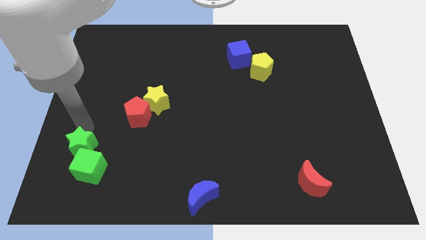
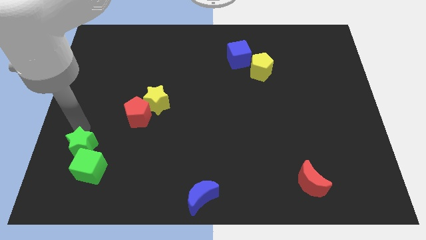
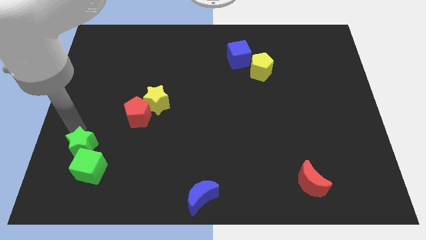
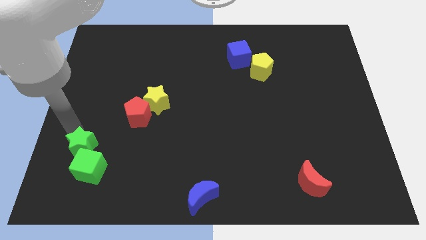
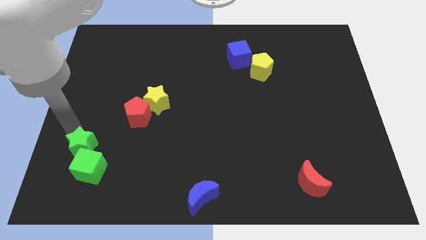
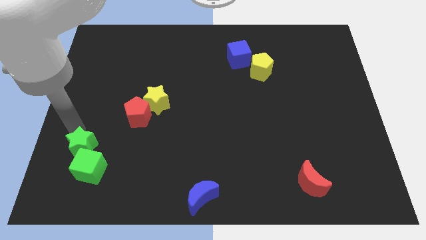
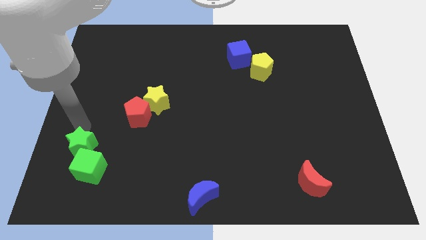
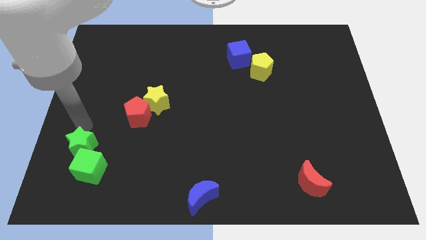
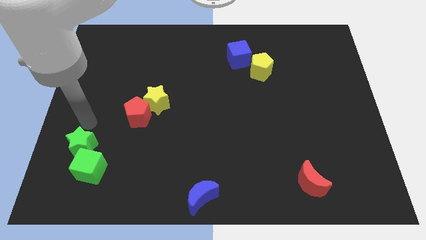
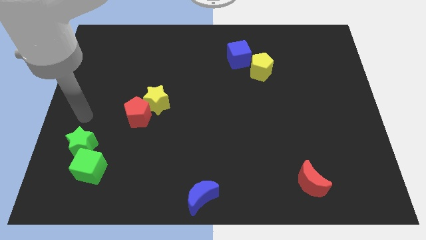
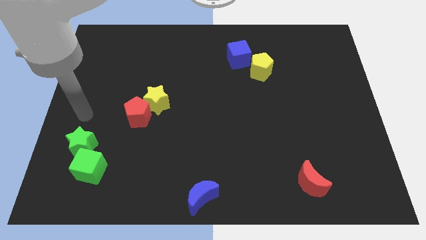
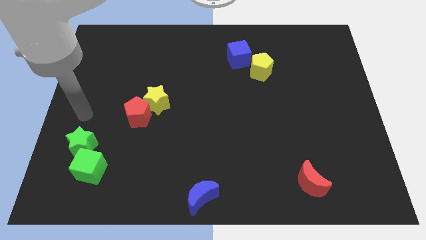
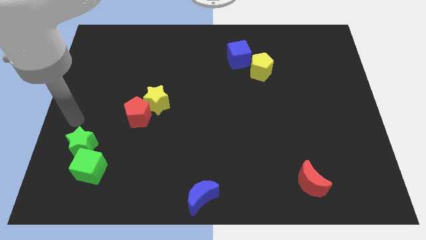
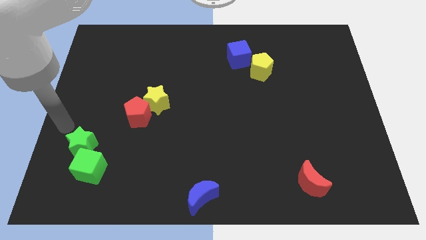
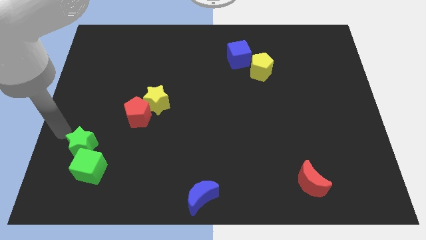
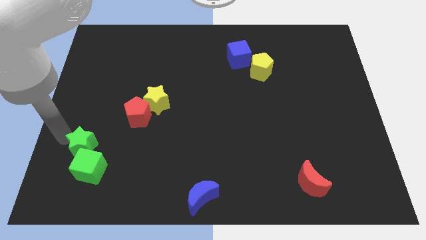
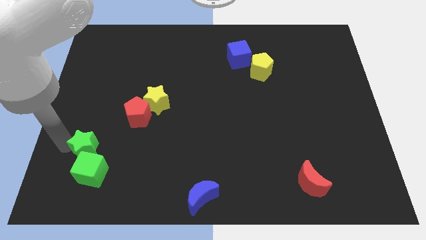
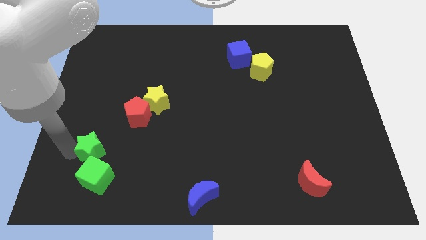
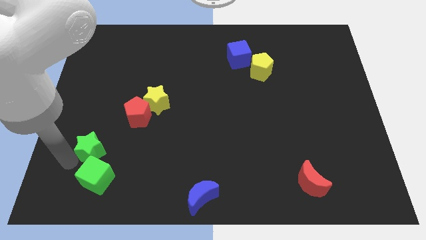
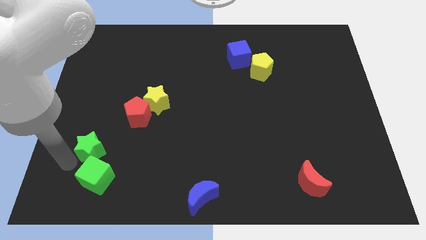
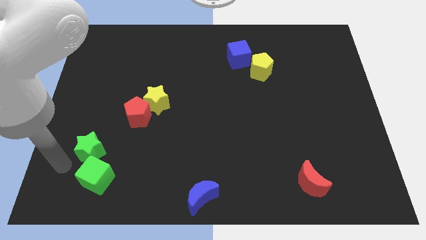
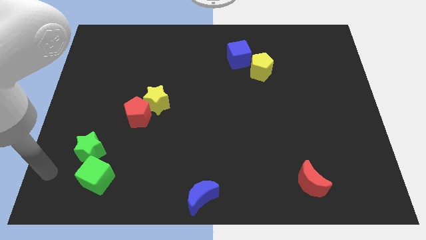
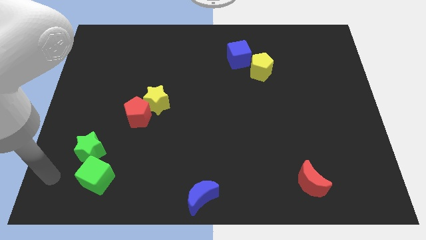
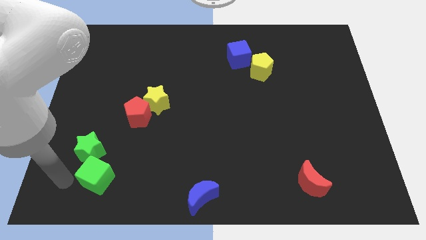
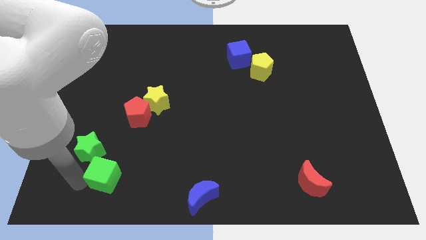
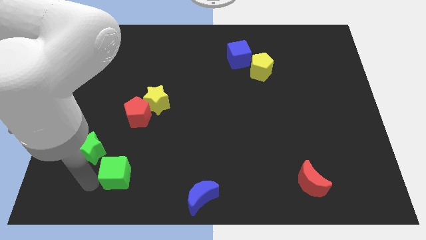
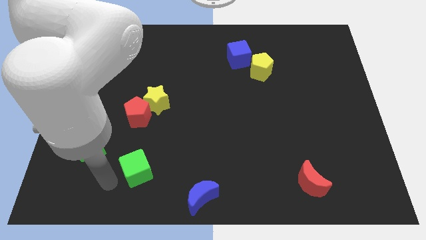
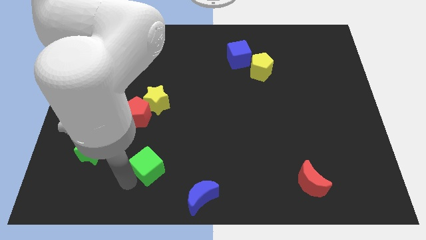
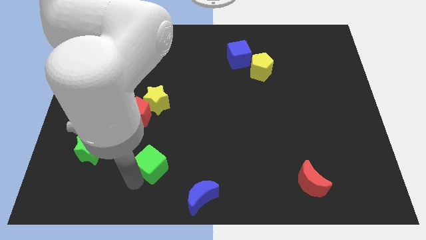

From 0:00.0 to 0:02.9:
separate green blocks

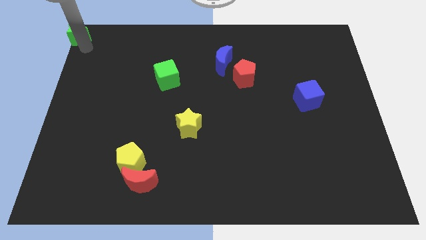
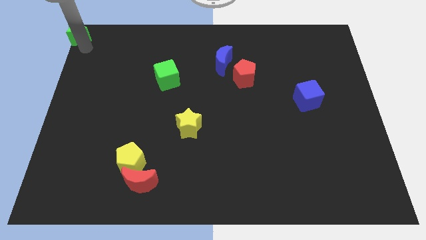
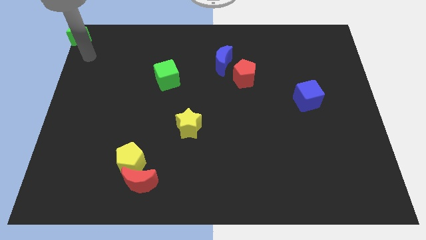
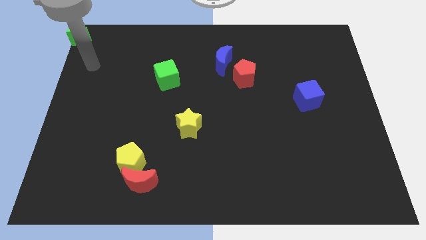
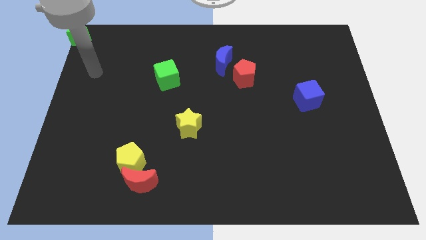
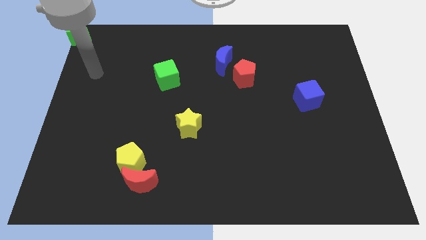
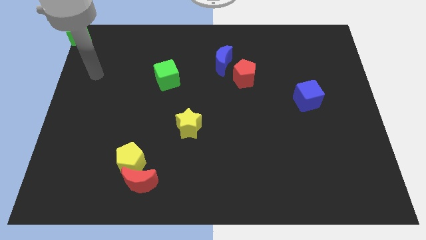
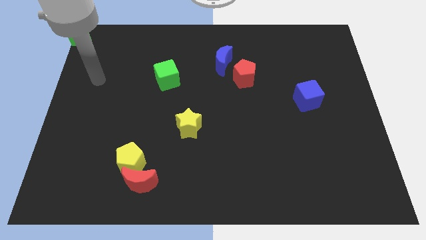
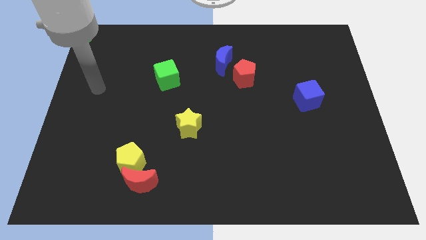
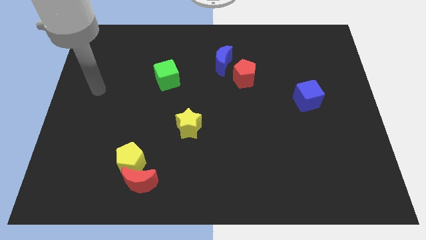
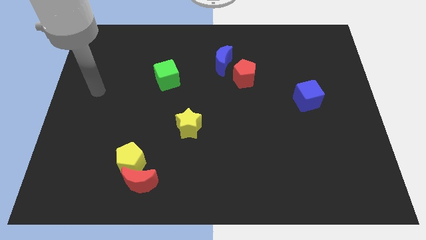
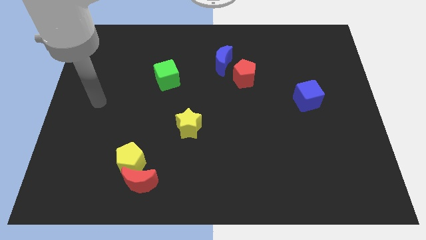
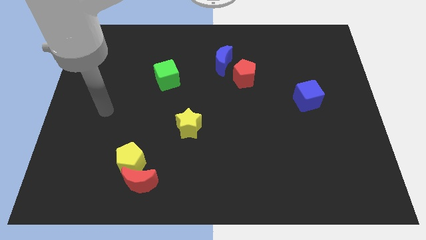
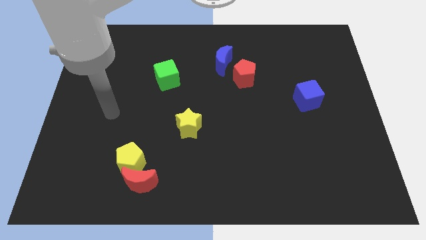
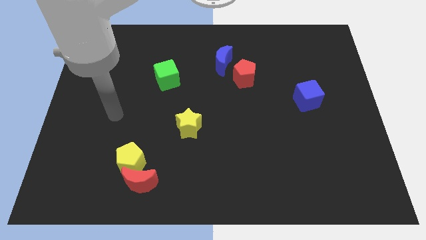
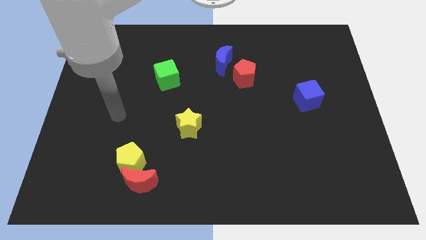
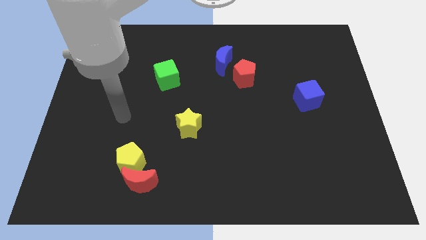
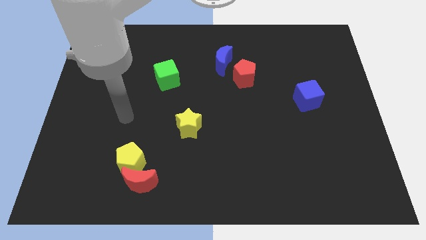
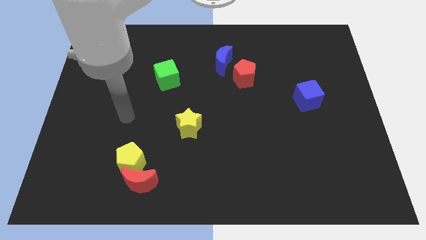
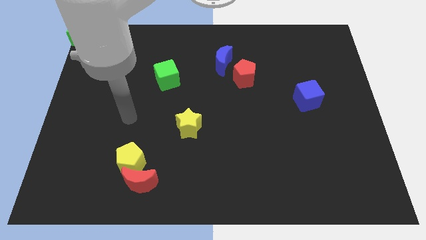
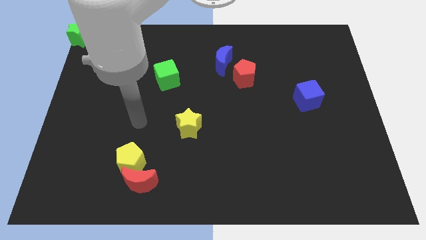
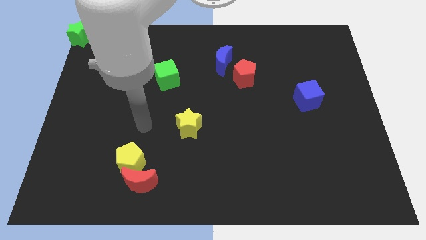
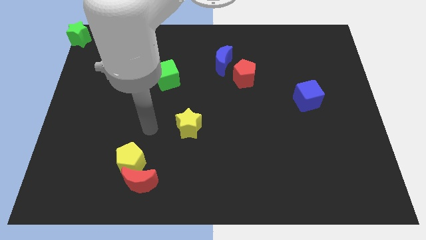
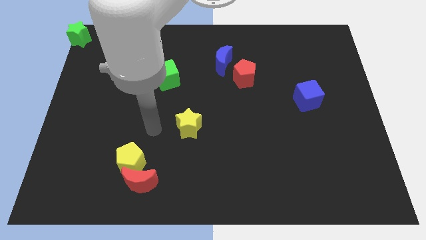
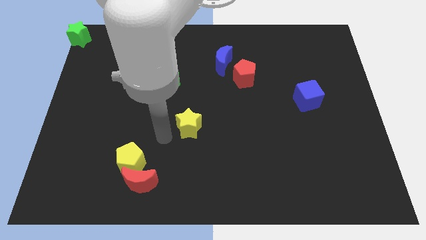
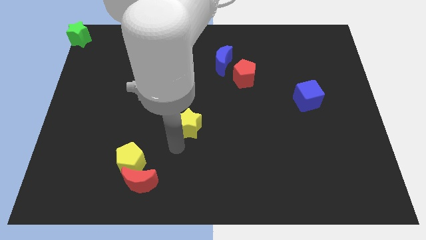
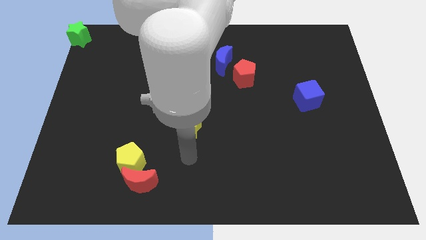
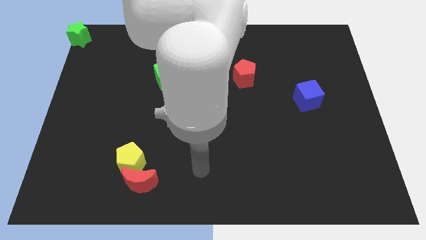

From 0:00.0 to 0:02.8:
place the arm below the yellow star

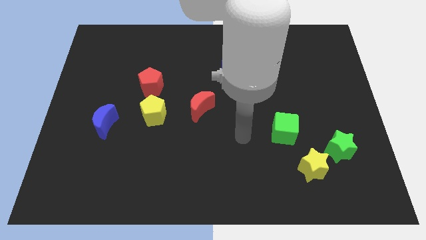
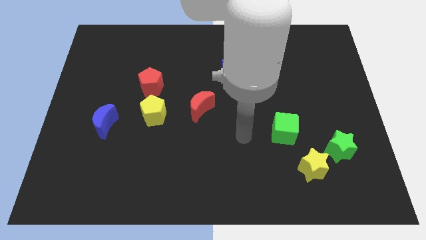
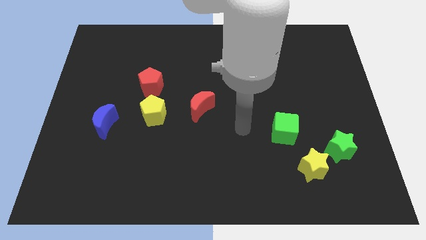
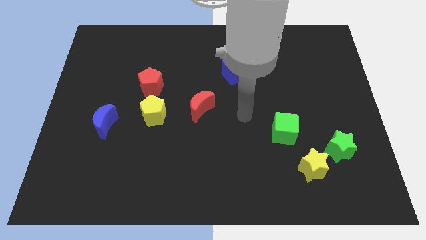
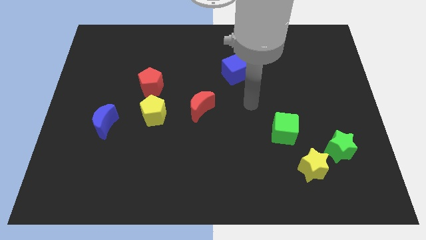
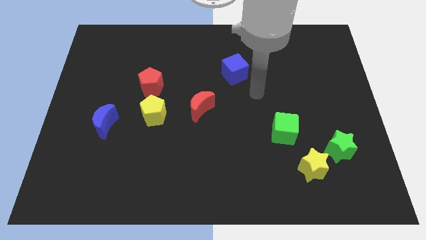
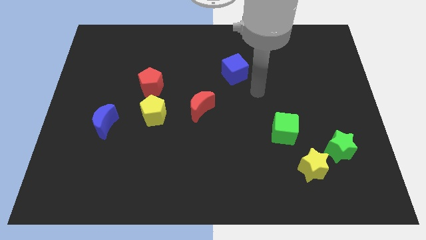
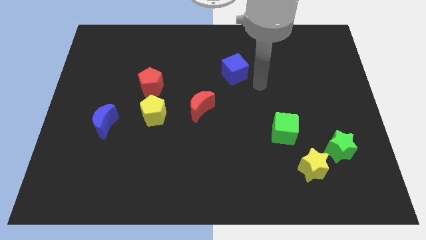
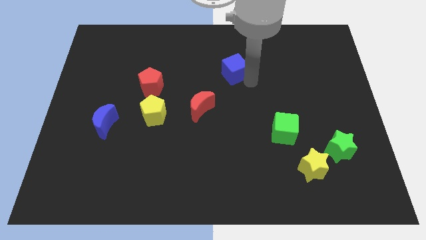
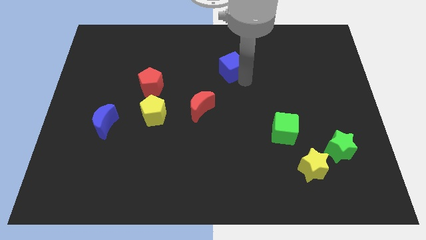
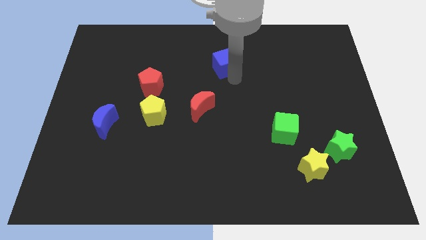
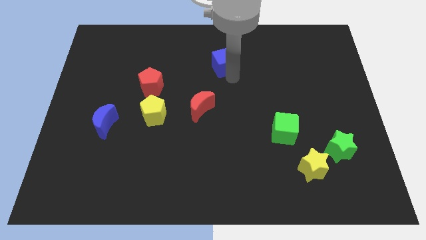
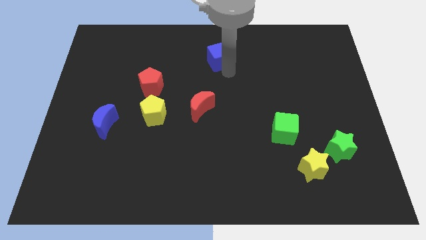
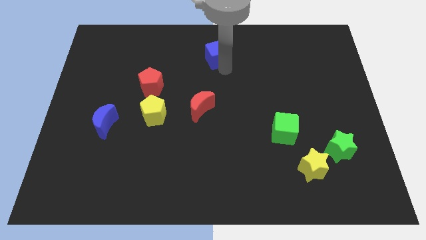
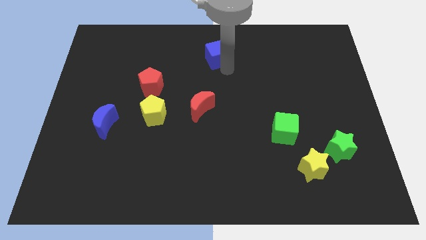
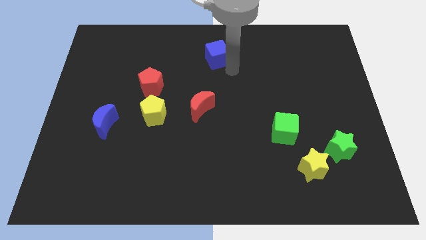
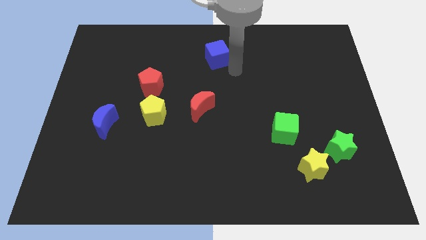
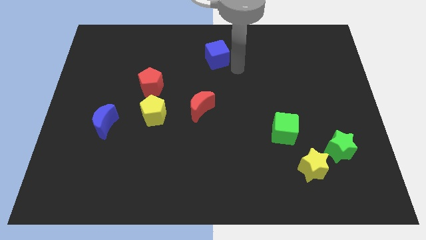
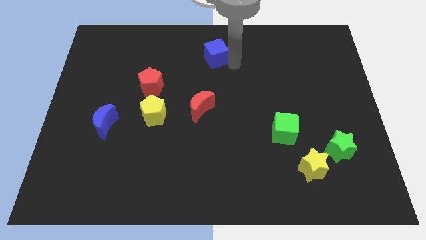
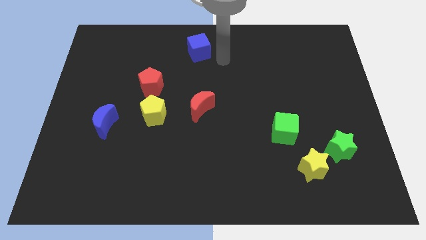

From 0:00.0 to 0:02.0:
move the blue cube to the top center

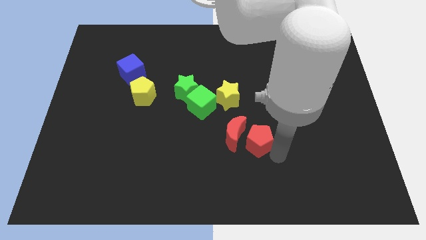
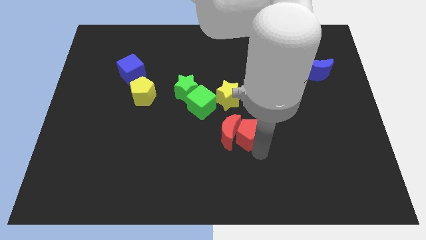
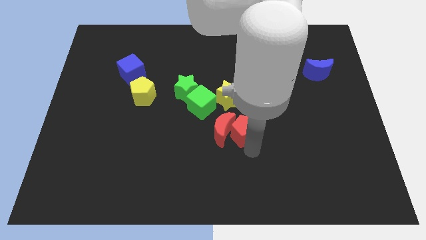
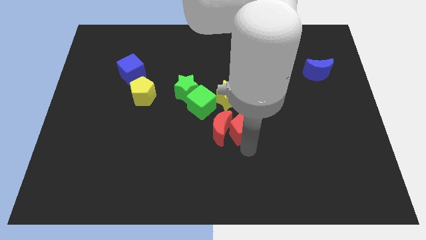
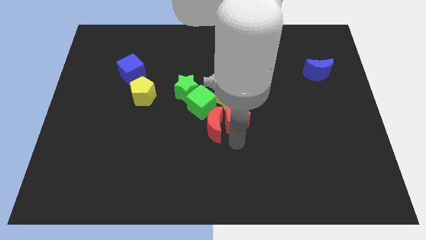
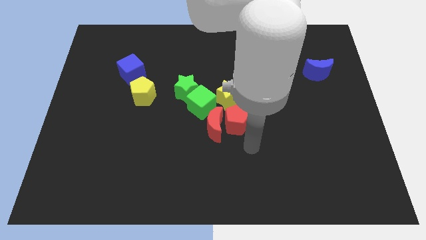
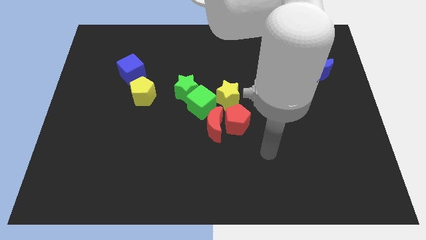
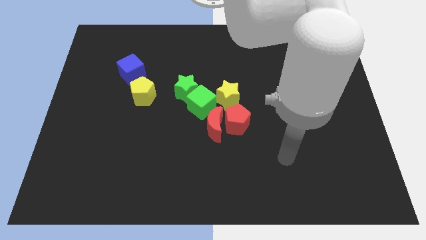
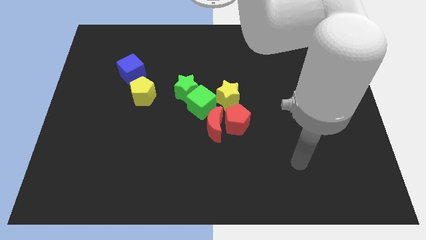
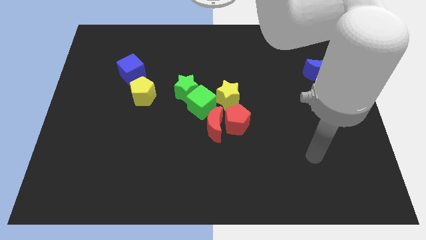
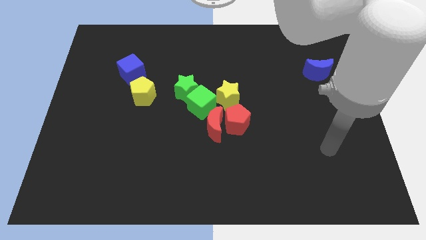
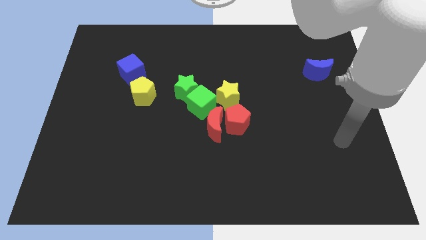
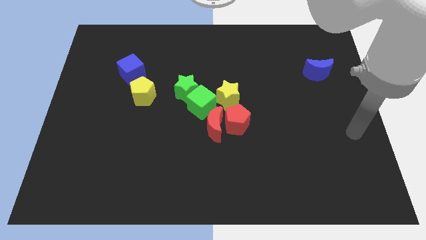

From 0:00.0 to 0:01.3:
move the red pentagon close to the yellow star
